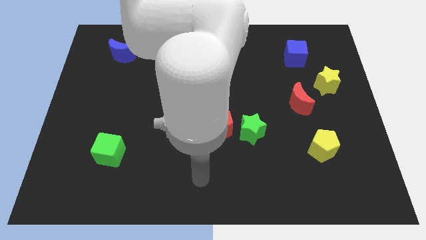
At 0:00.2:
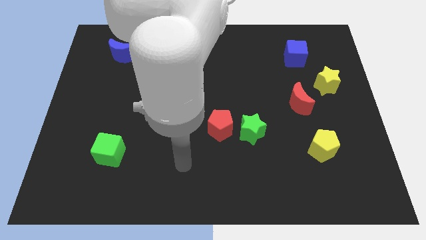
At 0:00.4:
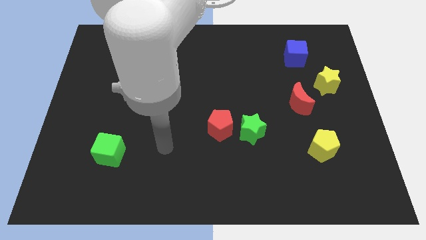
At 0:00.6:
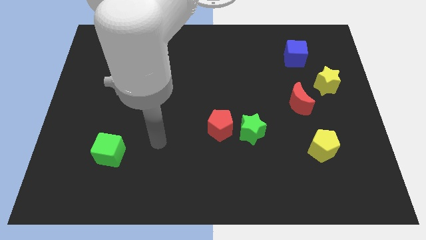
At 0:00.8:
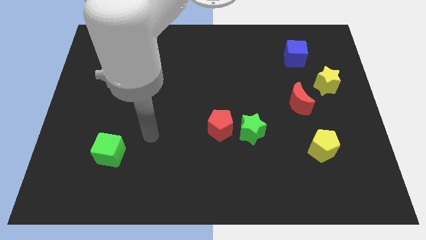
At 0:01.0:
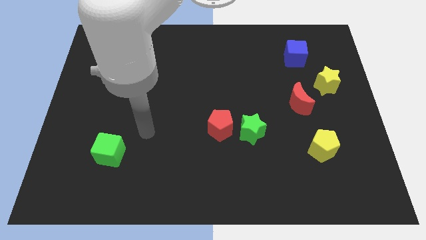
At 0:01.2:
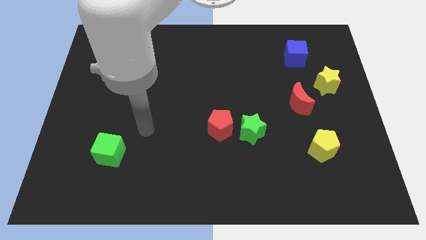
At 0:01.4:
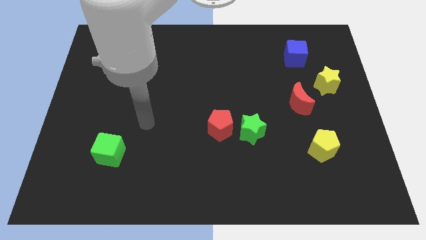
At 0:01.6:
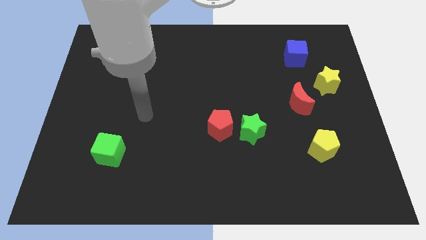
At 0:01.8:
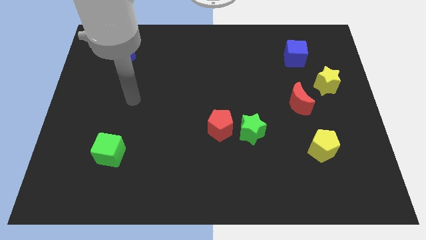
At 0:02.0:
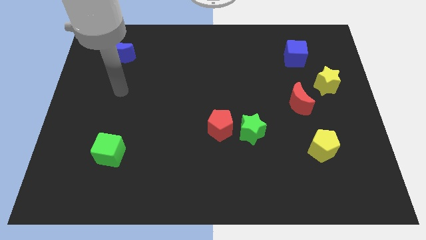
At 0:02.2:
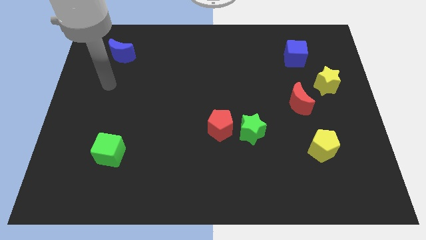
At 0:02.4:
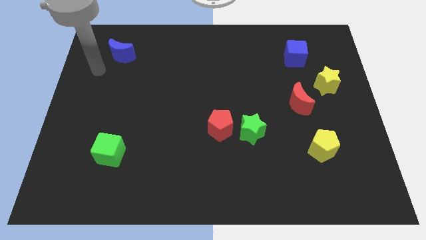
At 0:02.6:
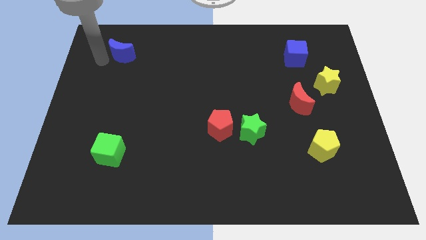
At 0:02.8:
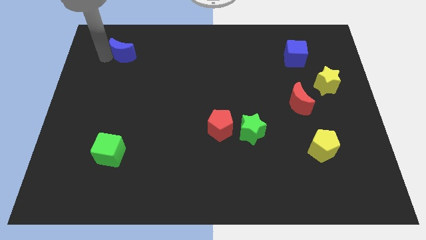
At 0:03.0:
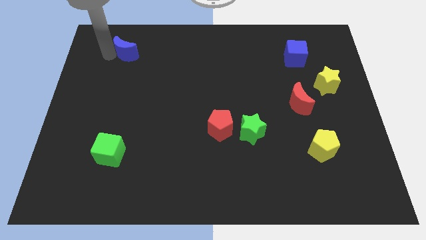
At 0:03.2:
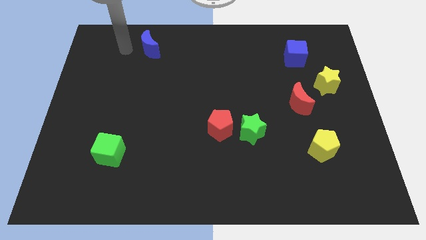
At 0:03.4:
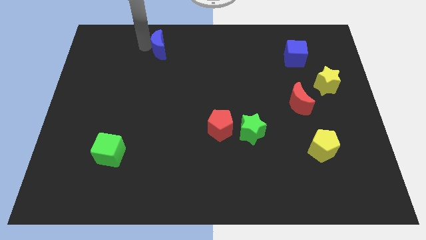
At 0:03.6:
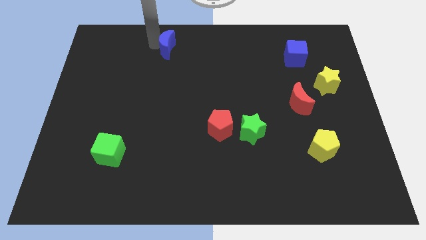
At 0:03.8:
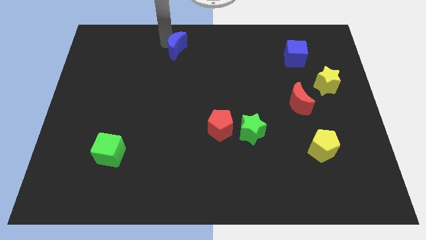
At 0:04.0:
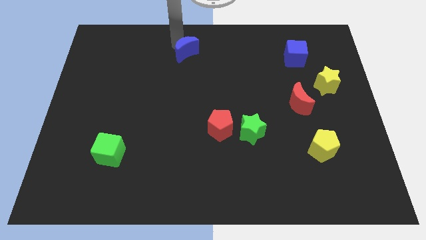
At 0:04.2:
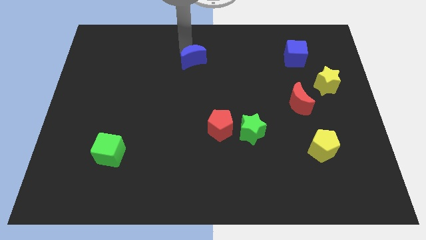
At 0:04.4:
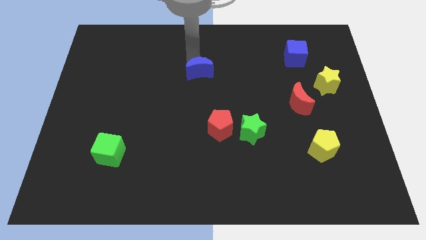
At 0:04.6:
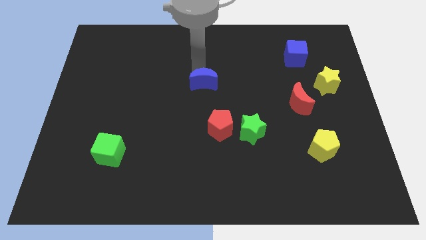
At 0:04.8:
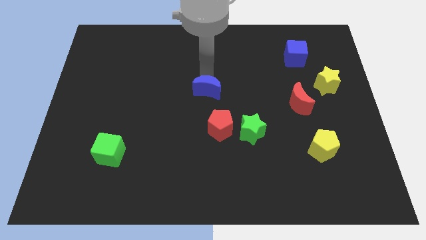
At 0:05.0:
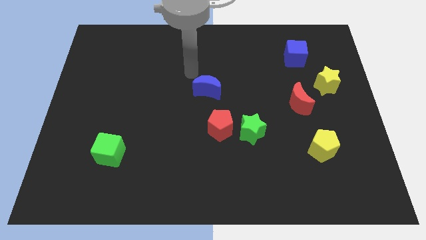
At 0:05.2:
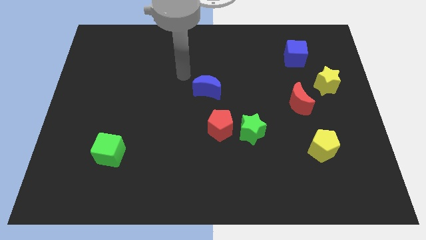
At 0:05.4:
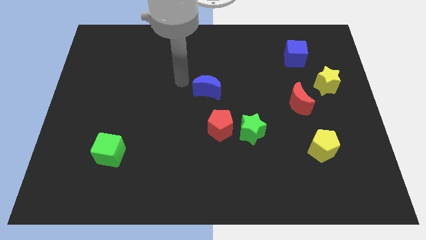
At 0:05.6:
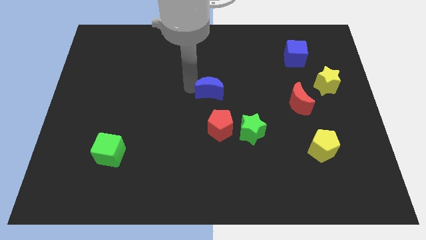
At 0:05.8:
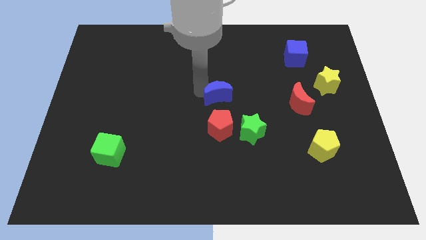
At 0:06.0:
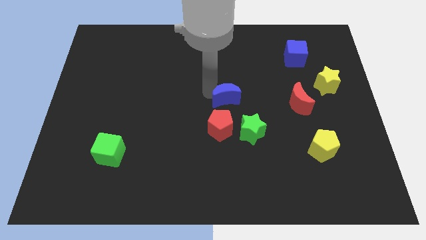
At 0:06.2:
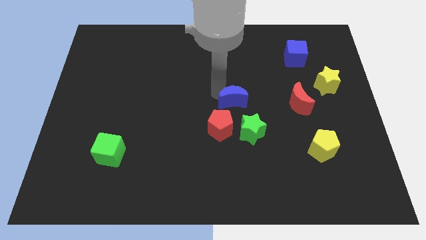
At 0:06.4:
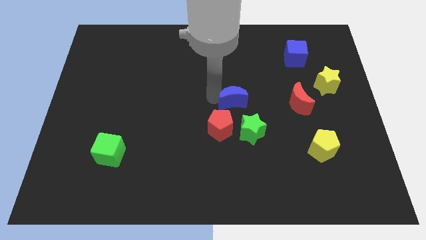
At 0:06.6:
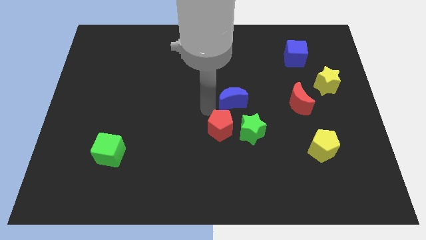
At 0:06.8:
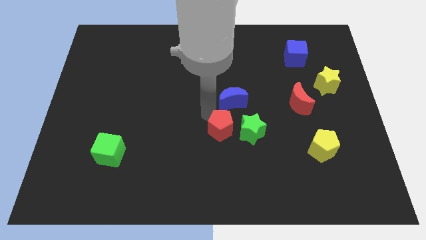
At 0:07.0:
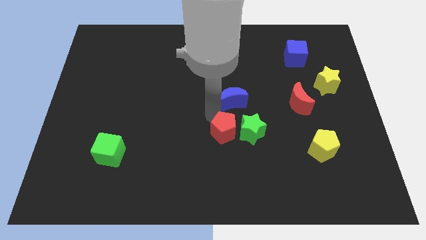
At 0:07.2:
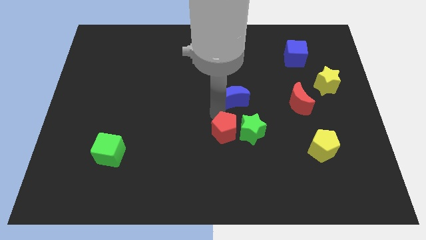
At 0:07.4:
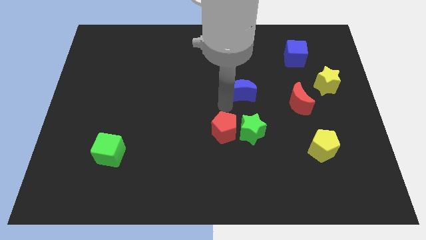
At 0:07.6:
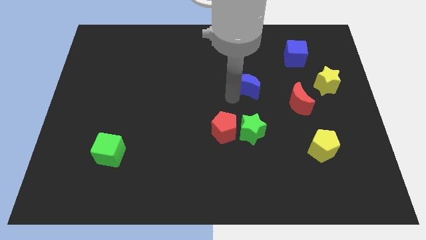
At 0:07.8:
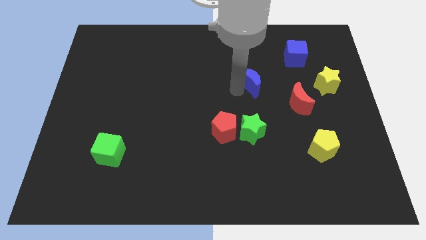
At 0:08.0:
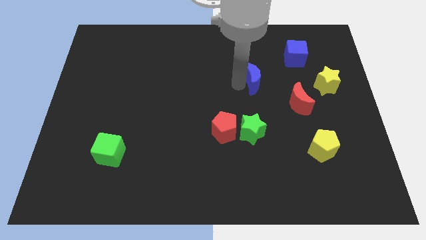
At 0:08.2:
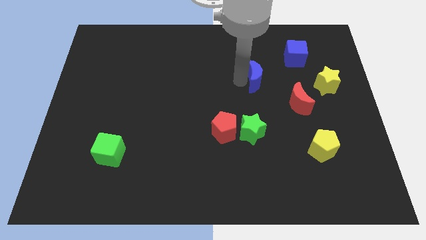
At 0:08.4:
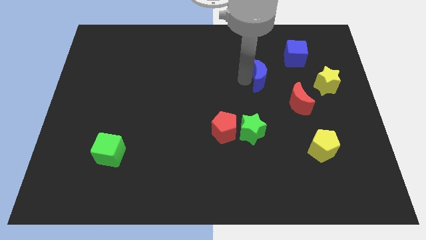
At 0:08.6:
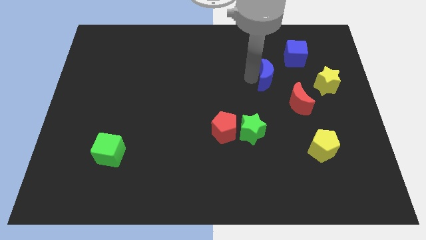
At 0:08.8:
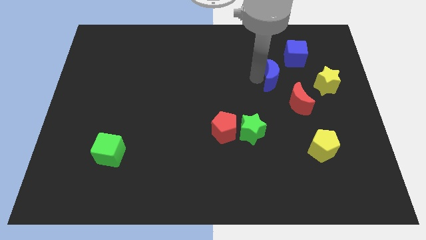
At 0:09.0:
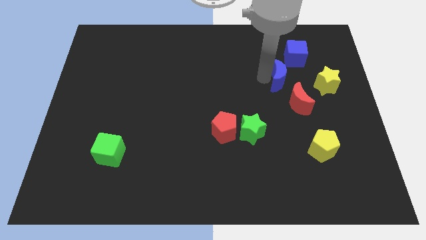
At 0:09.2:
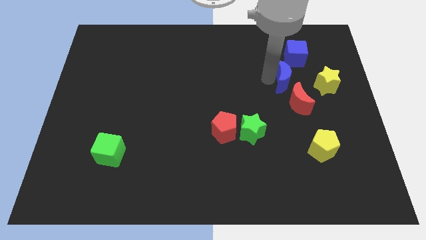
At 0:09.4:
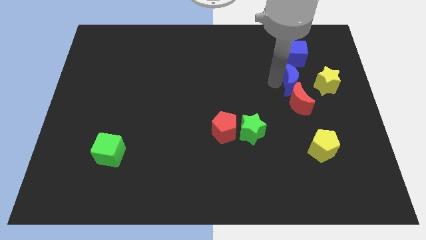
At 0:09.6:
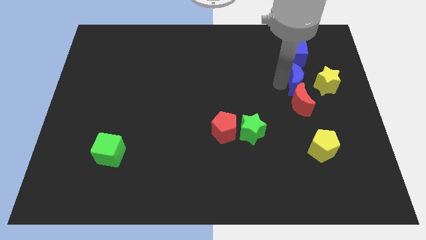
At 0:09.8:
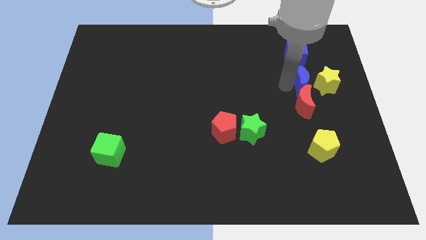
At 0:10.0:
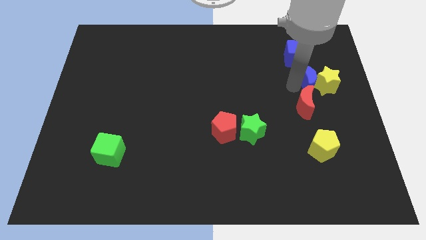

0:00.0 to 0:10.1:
move the blue moon to the yellow star

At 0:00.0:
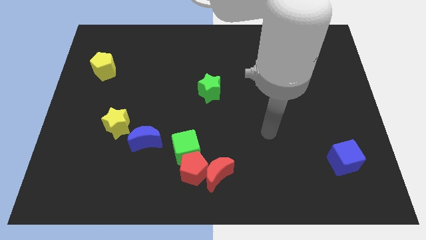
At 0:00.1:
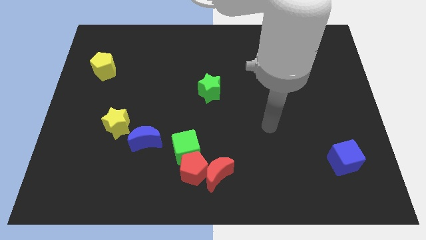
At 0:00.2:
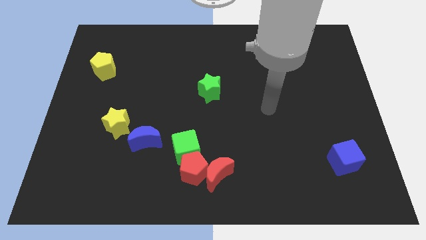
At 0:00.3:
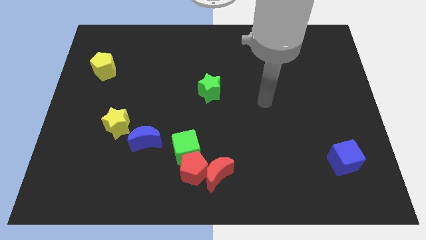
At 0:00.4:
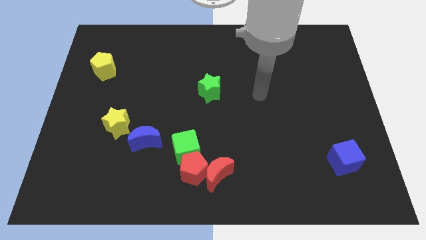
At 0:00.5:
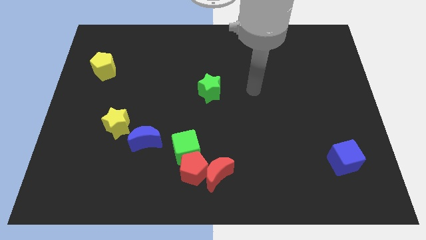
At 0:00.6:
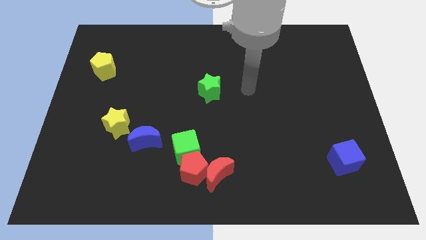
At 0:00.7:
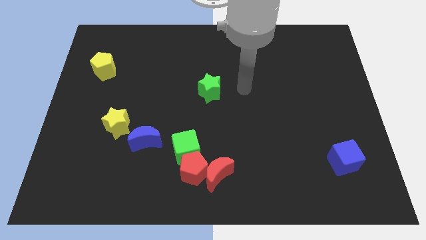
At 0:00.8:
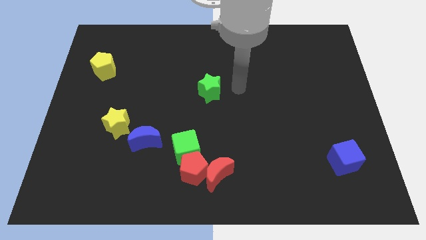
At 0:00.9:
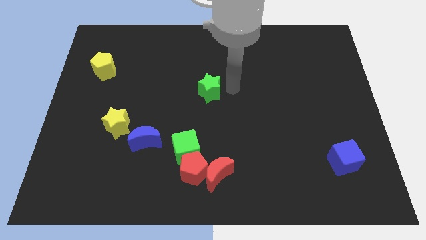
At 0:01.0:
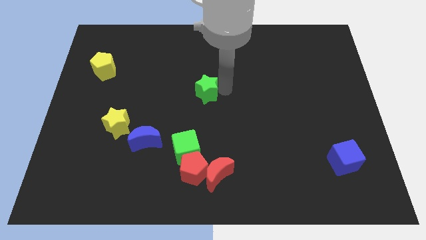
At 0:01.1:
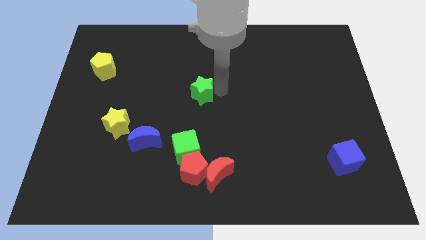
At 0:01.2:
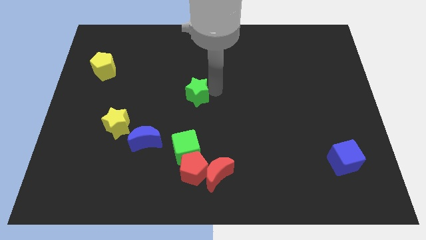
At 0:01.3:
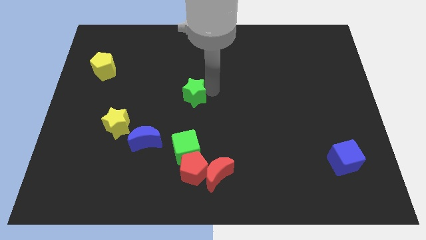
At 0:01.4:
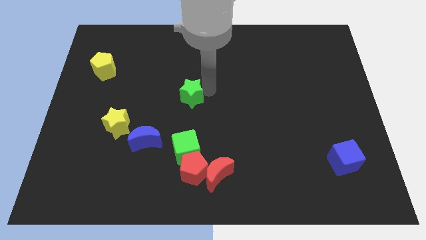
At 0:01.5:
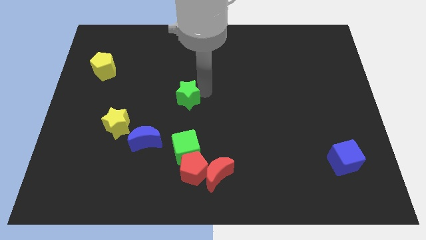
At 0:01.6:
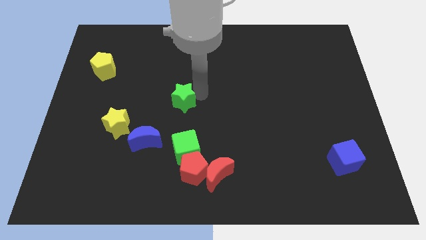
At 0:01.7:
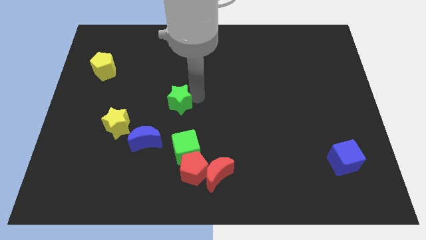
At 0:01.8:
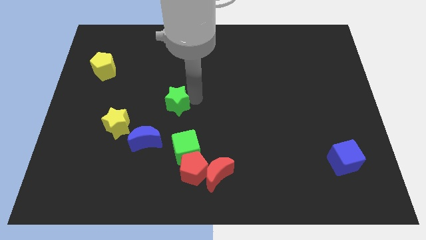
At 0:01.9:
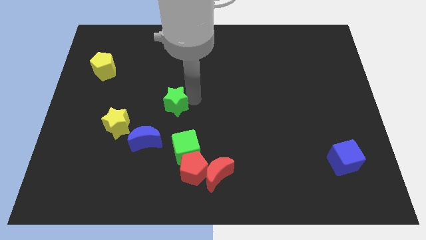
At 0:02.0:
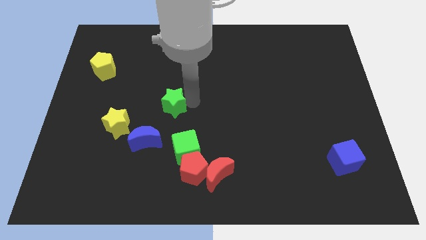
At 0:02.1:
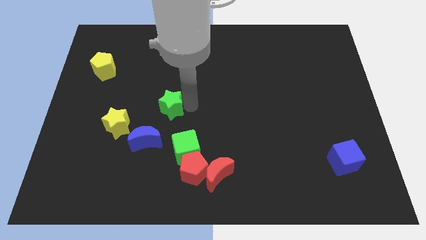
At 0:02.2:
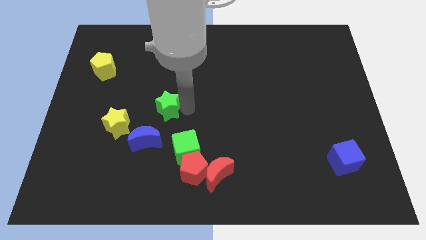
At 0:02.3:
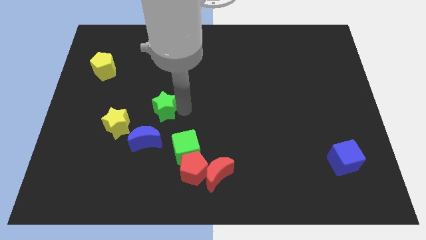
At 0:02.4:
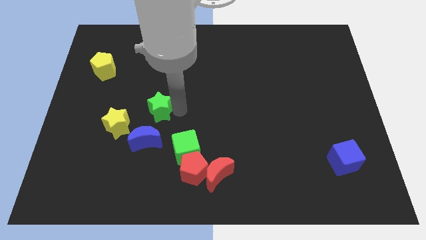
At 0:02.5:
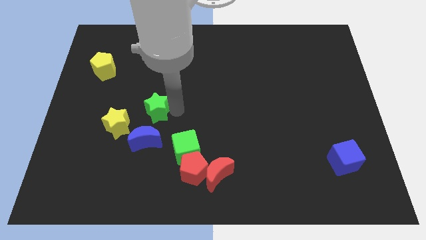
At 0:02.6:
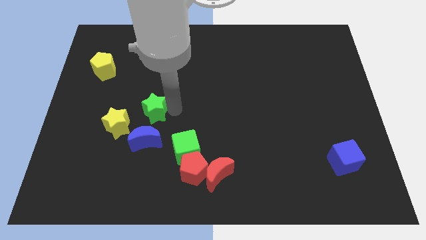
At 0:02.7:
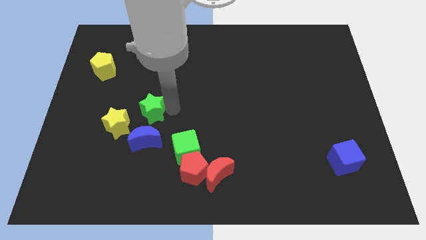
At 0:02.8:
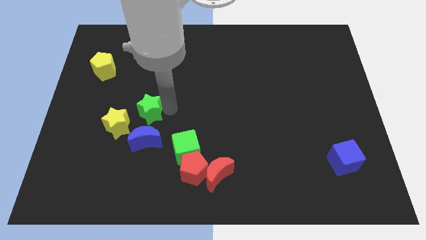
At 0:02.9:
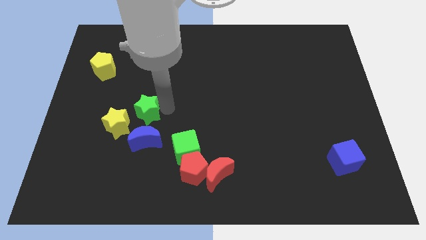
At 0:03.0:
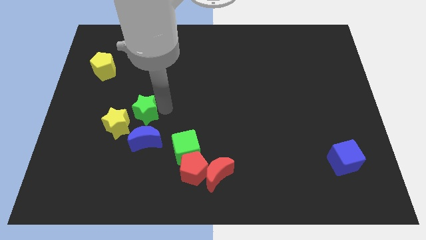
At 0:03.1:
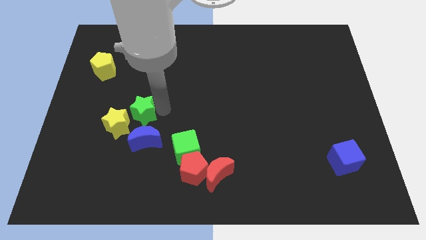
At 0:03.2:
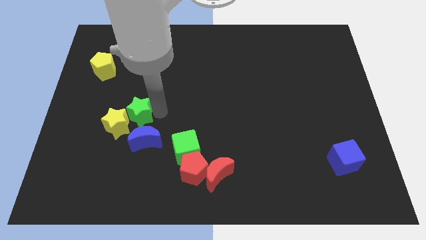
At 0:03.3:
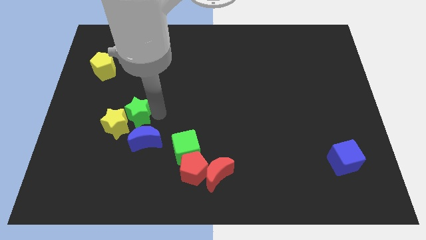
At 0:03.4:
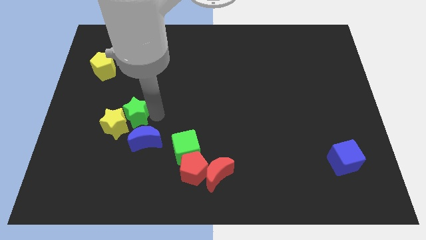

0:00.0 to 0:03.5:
move the green star towards the yellow star

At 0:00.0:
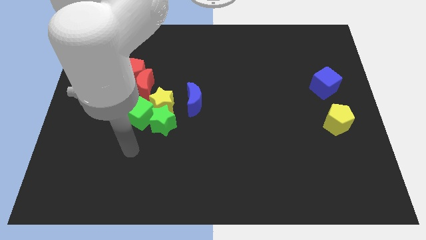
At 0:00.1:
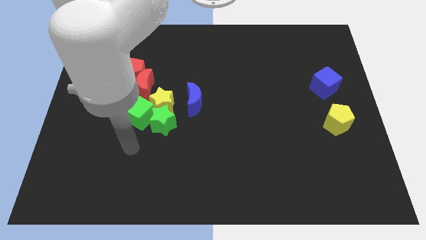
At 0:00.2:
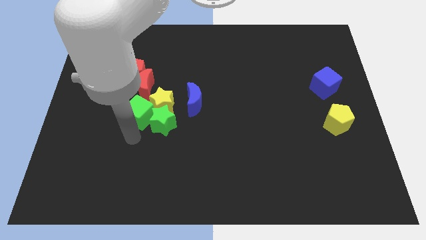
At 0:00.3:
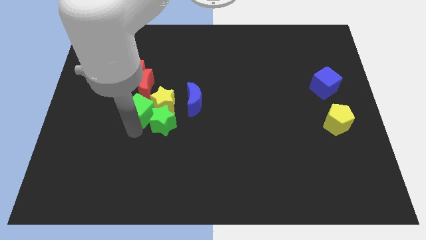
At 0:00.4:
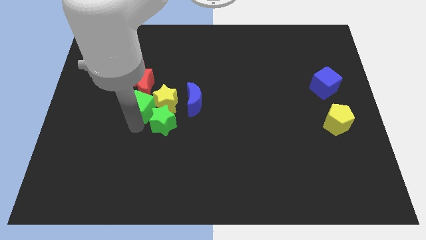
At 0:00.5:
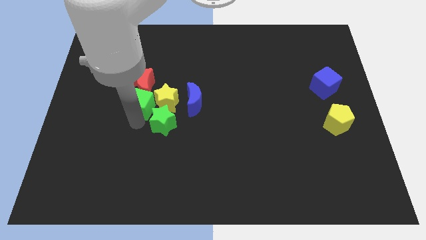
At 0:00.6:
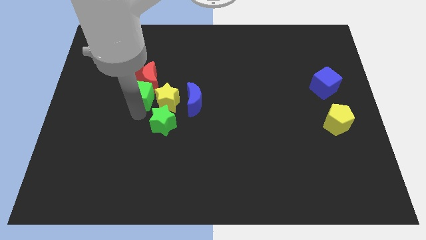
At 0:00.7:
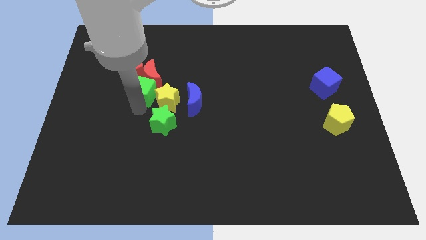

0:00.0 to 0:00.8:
move the green cube close to the red moon
